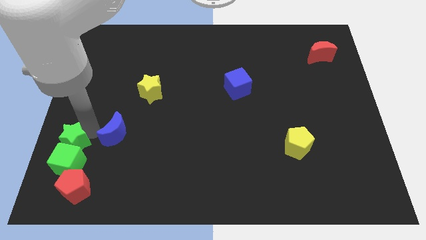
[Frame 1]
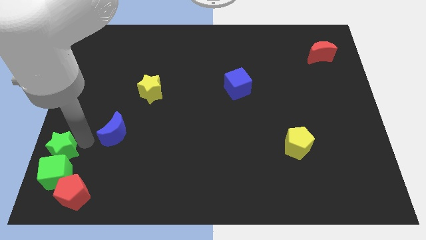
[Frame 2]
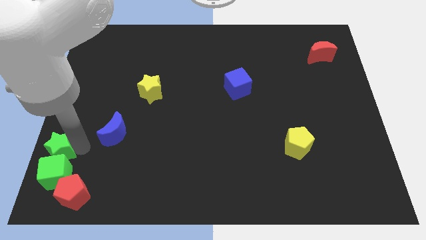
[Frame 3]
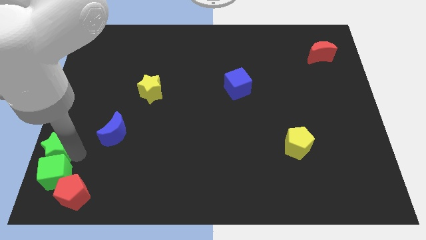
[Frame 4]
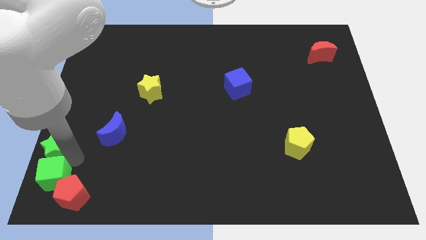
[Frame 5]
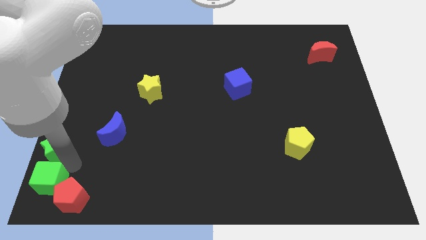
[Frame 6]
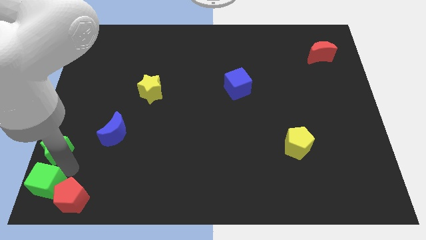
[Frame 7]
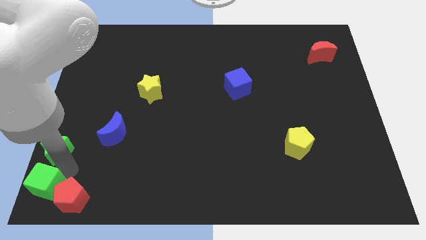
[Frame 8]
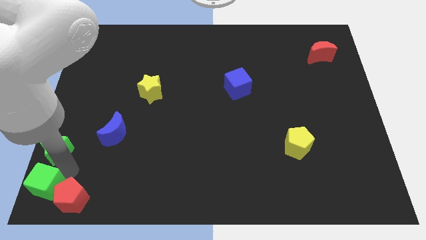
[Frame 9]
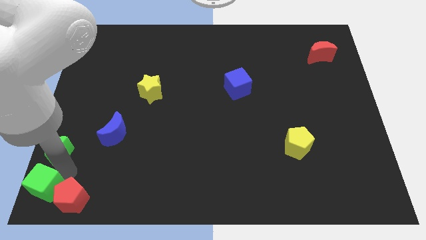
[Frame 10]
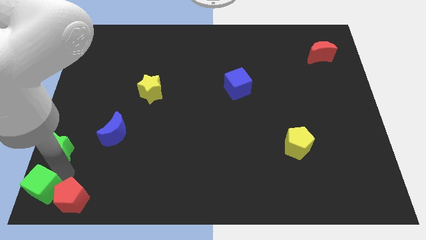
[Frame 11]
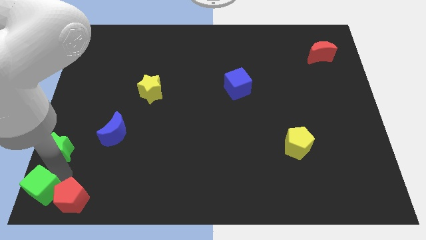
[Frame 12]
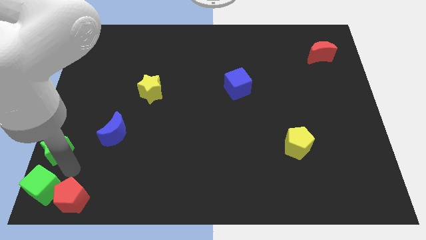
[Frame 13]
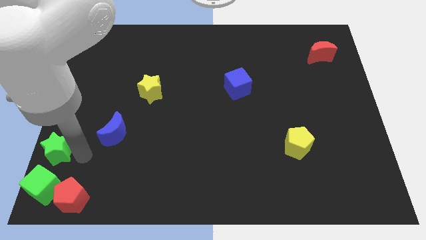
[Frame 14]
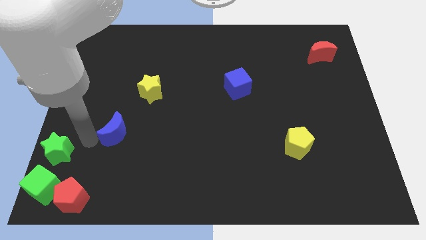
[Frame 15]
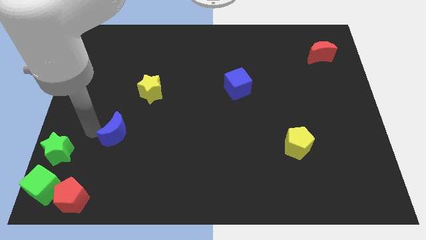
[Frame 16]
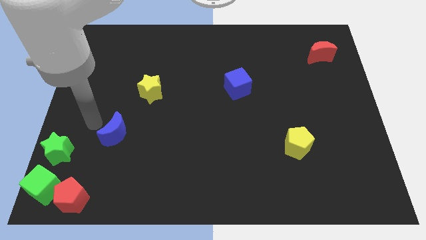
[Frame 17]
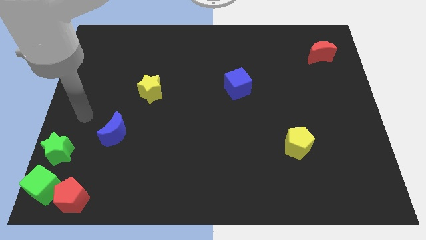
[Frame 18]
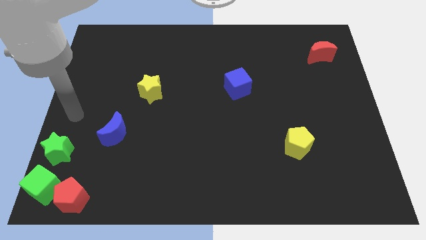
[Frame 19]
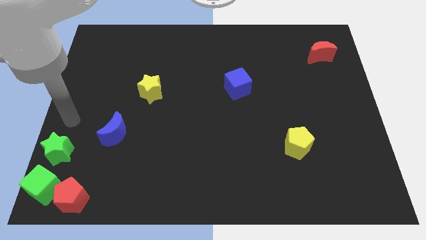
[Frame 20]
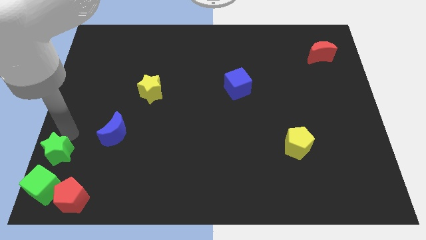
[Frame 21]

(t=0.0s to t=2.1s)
move the green cube away from the green star

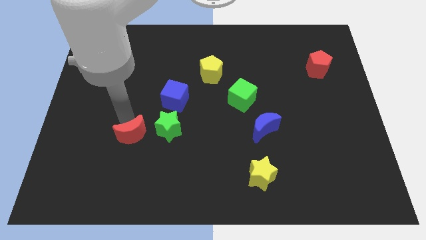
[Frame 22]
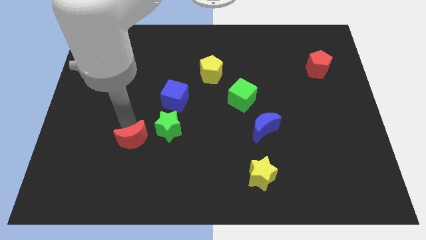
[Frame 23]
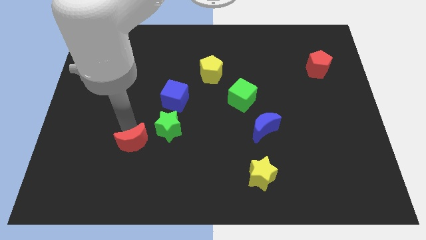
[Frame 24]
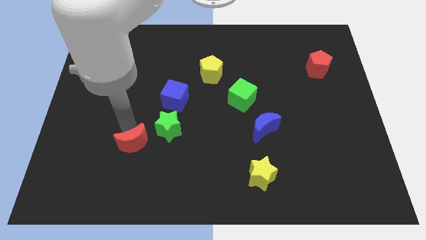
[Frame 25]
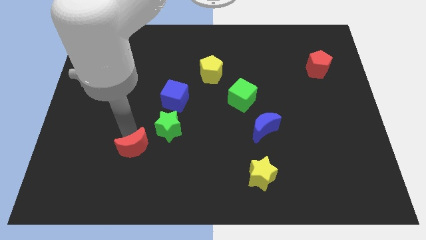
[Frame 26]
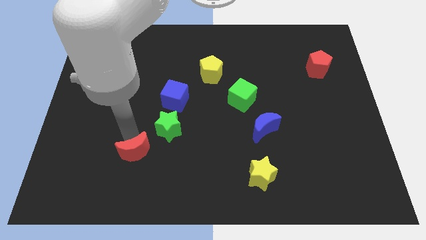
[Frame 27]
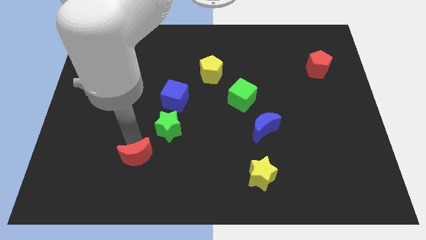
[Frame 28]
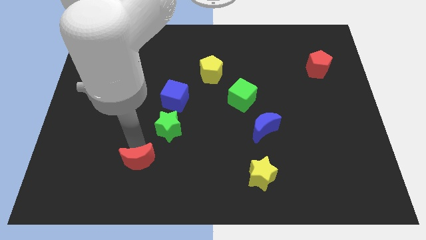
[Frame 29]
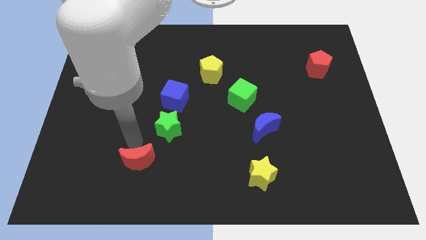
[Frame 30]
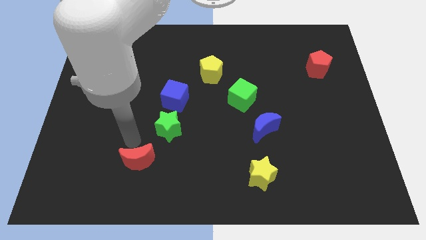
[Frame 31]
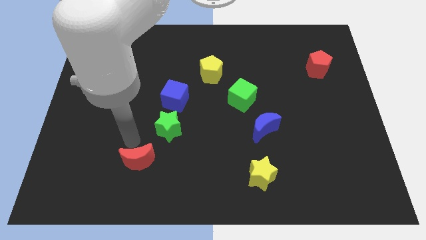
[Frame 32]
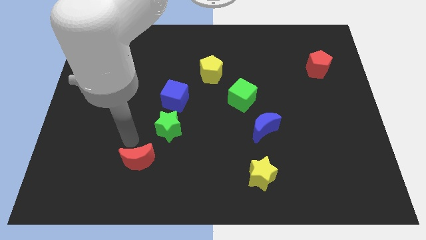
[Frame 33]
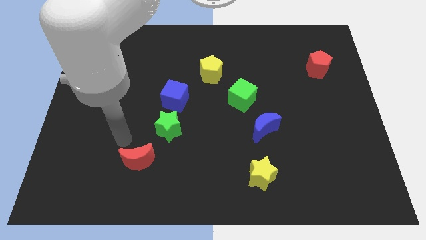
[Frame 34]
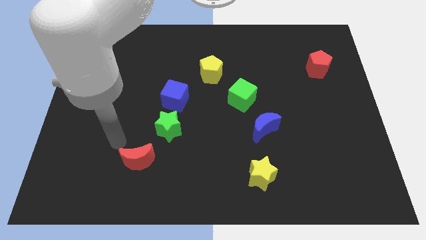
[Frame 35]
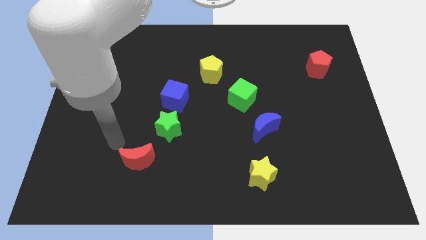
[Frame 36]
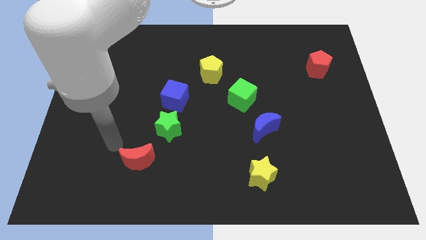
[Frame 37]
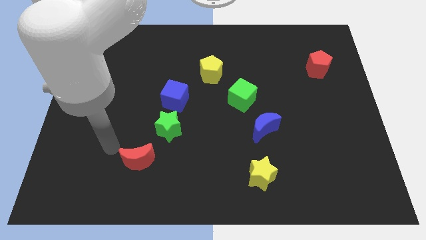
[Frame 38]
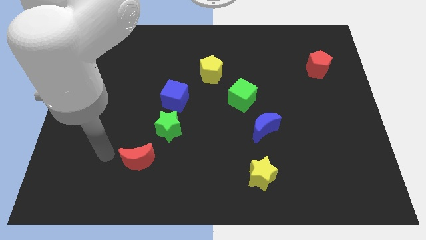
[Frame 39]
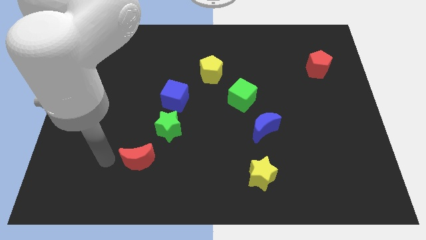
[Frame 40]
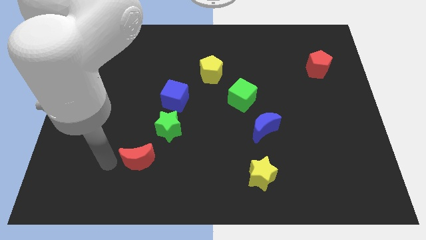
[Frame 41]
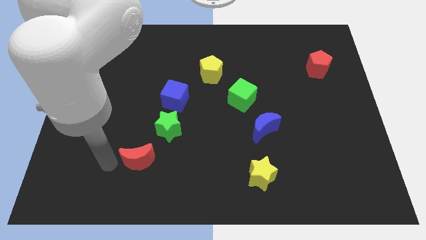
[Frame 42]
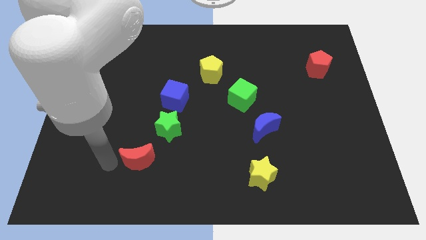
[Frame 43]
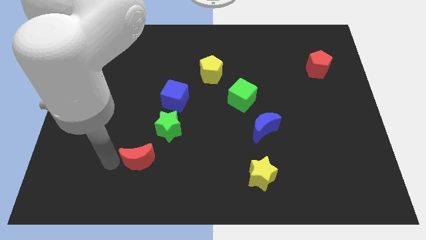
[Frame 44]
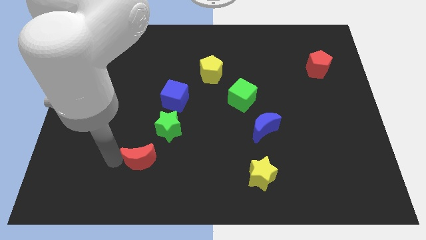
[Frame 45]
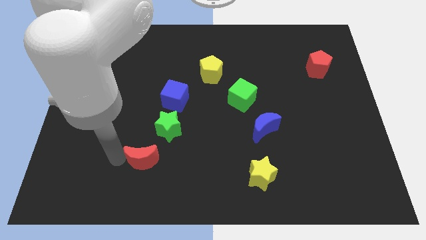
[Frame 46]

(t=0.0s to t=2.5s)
move the red moon towards the bottom left of the green star

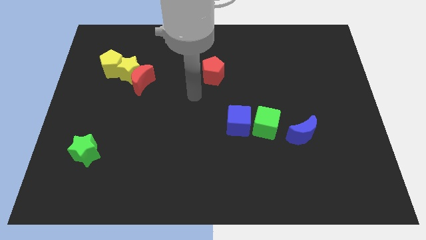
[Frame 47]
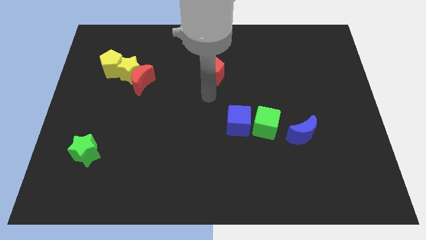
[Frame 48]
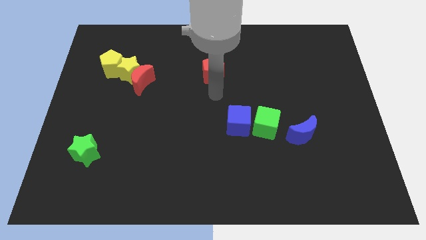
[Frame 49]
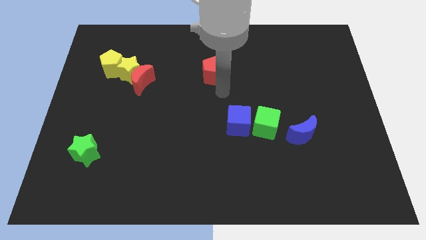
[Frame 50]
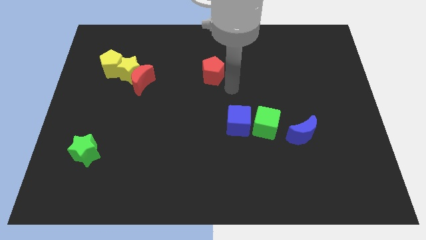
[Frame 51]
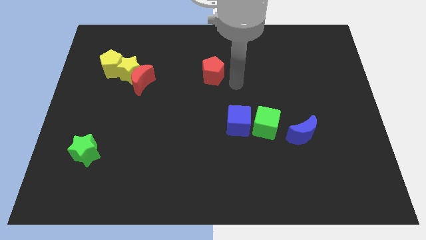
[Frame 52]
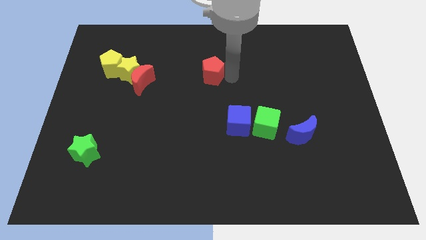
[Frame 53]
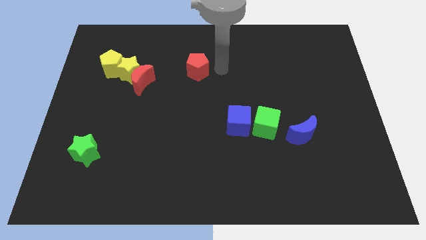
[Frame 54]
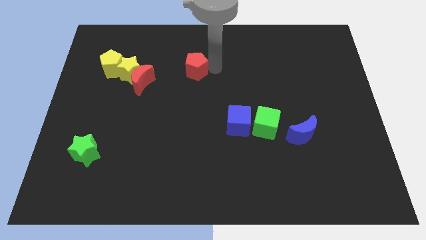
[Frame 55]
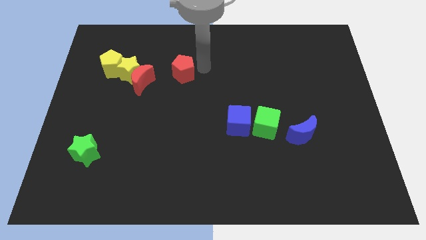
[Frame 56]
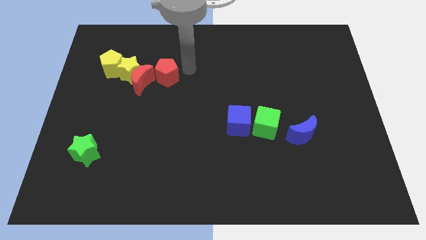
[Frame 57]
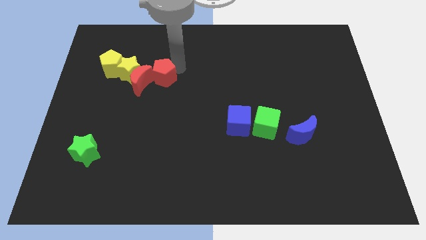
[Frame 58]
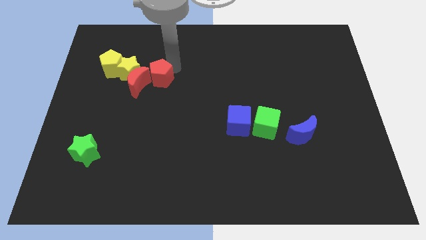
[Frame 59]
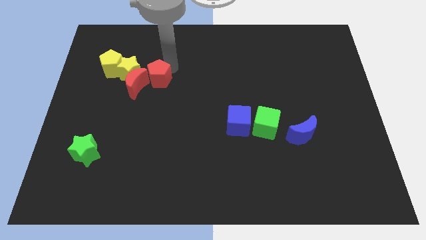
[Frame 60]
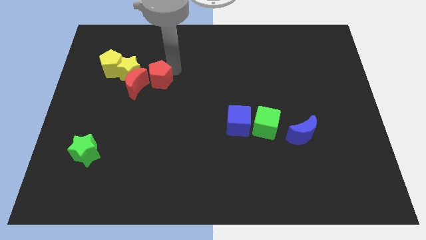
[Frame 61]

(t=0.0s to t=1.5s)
move the red pentagon into the red moon

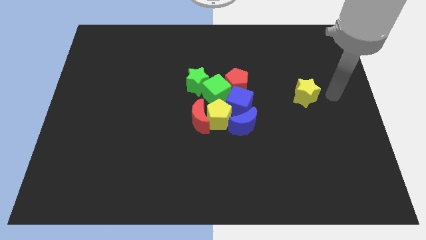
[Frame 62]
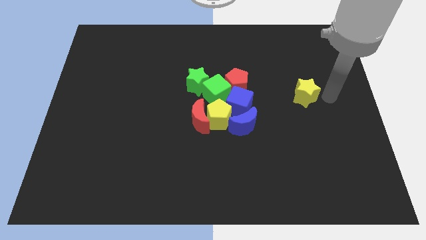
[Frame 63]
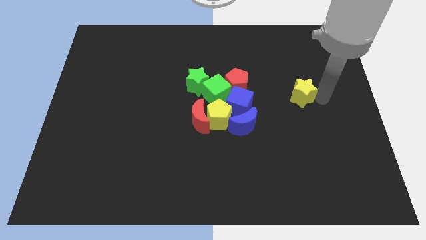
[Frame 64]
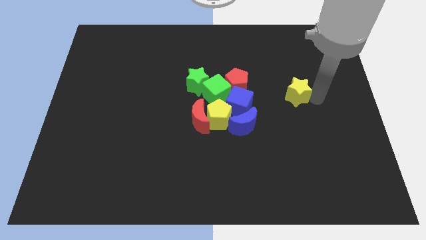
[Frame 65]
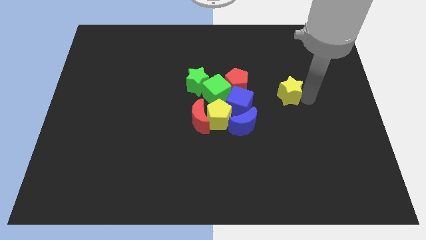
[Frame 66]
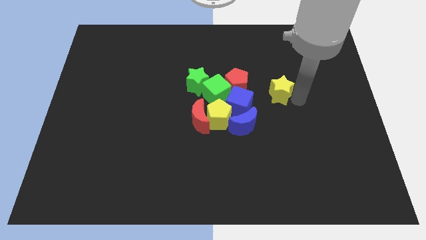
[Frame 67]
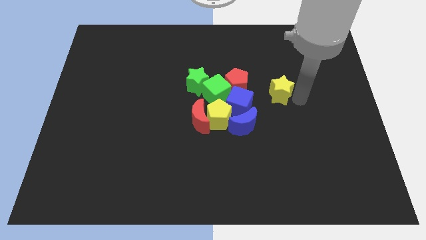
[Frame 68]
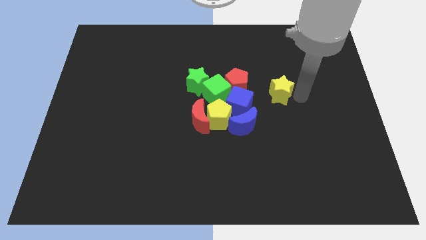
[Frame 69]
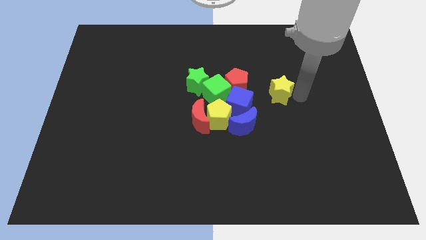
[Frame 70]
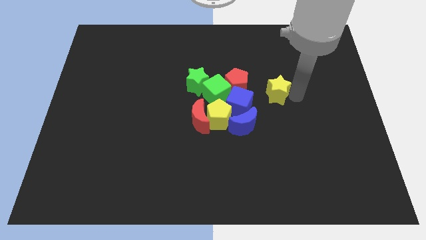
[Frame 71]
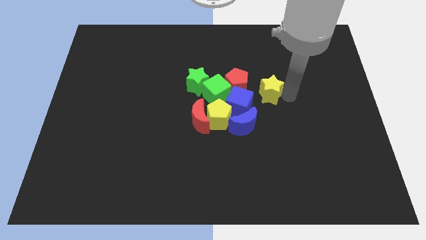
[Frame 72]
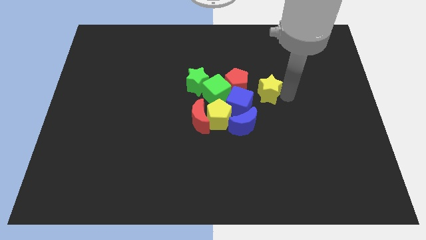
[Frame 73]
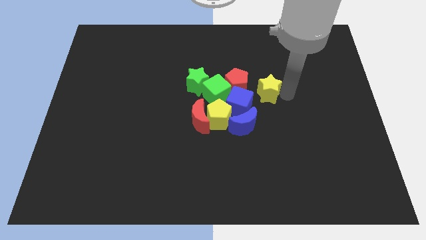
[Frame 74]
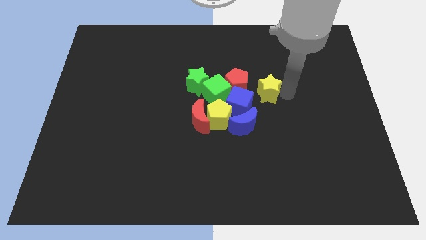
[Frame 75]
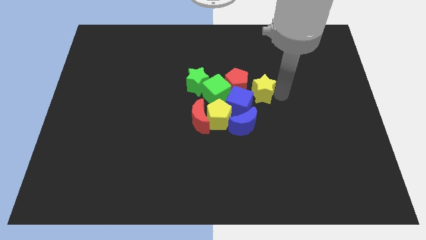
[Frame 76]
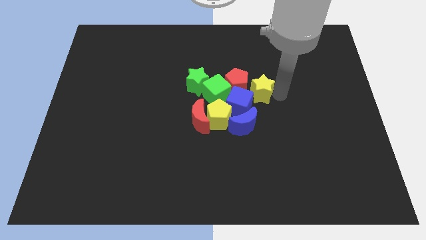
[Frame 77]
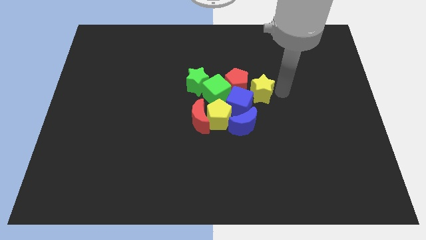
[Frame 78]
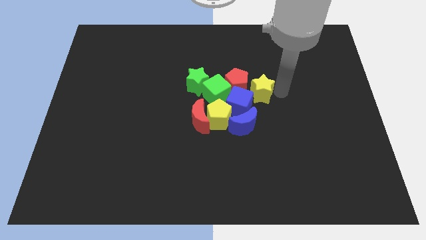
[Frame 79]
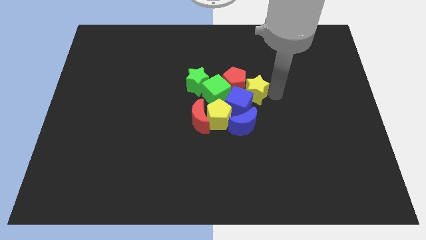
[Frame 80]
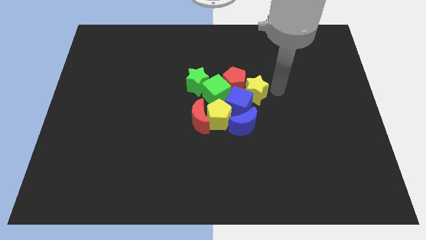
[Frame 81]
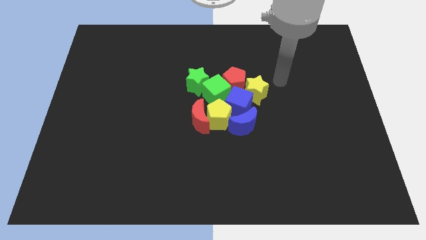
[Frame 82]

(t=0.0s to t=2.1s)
move the yellow star above to the blue cube

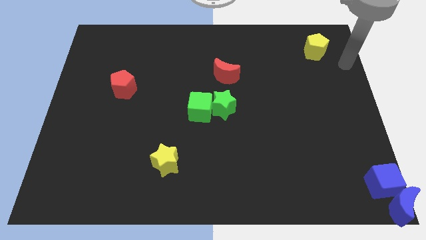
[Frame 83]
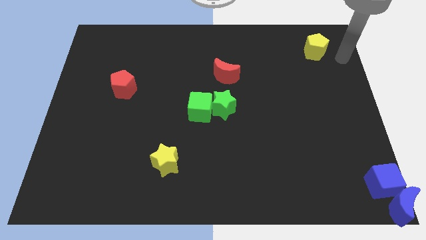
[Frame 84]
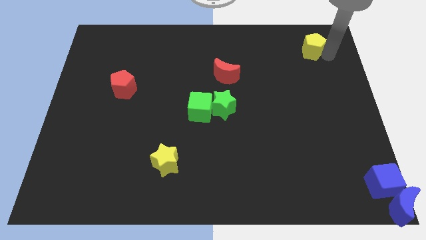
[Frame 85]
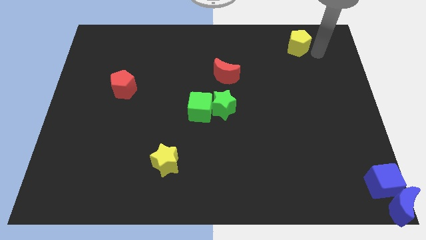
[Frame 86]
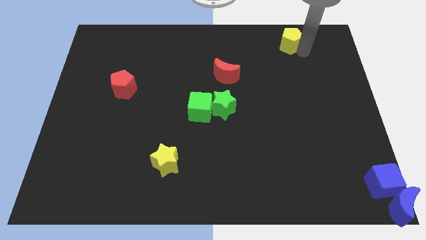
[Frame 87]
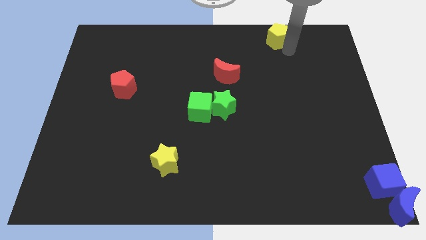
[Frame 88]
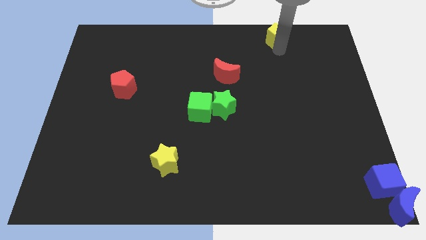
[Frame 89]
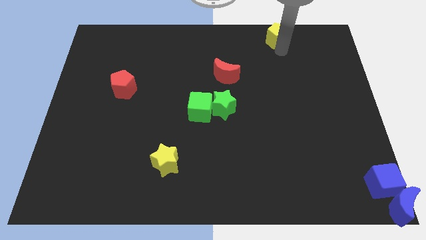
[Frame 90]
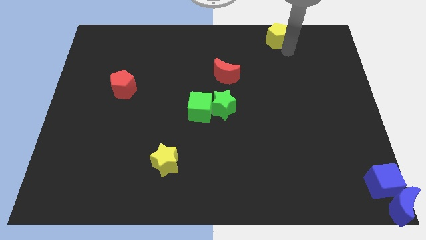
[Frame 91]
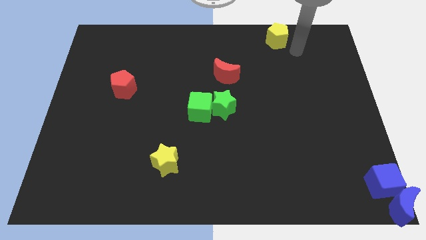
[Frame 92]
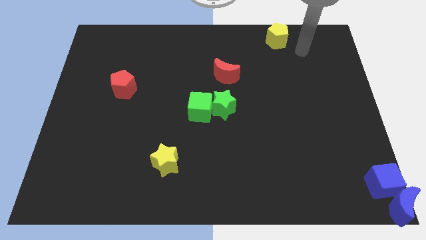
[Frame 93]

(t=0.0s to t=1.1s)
move the yellow pentagon to the top of the board
